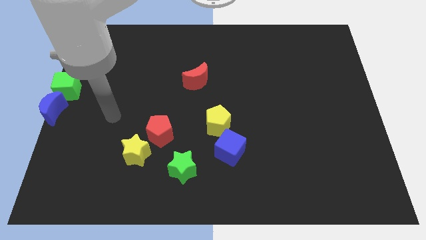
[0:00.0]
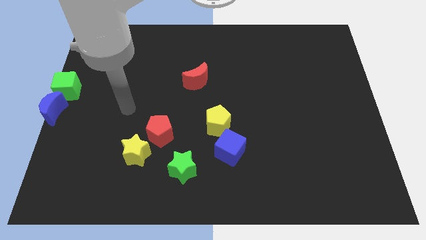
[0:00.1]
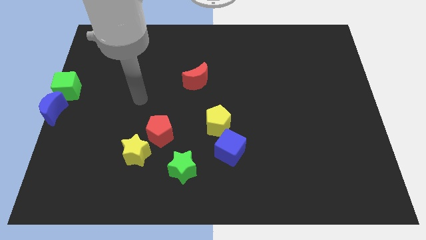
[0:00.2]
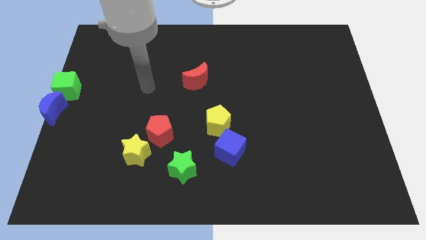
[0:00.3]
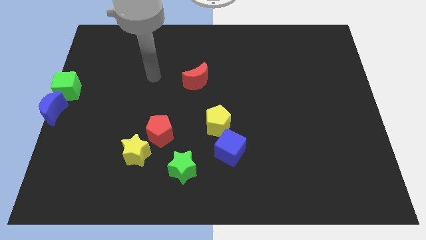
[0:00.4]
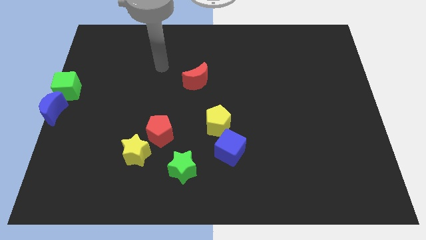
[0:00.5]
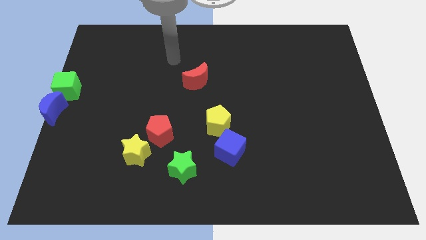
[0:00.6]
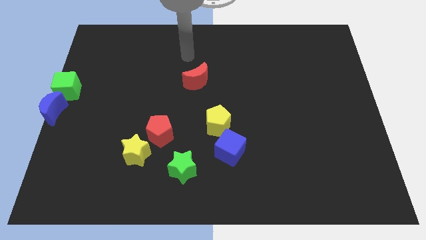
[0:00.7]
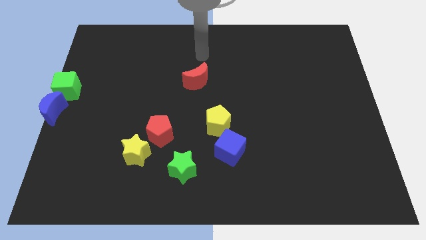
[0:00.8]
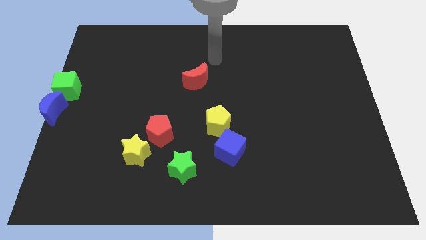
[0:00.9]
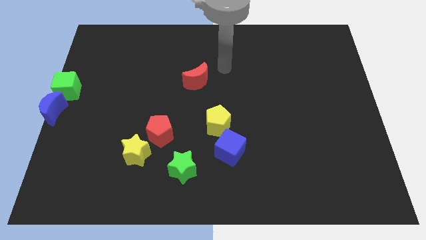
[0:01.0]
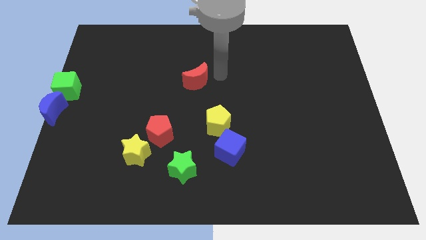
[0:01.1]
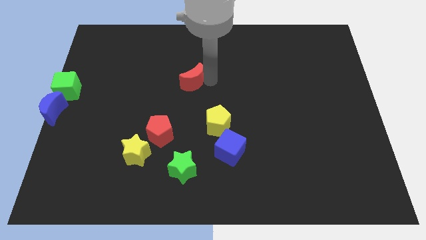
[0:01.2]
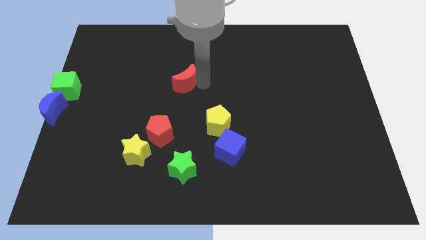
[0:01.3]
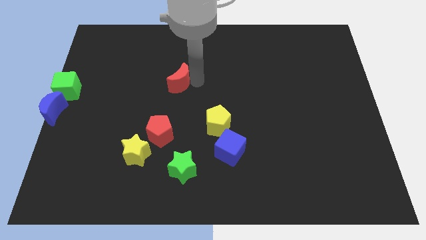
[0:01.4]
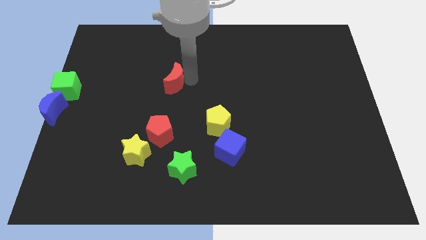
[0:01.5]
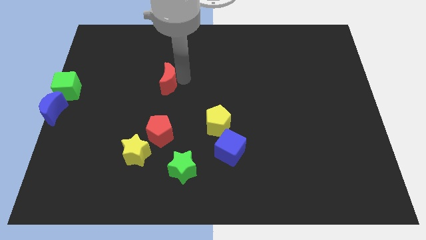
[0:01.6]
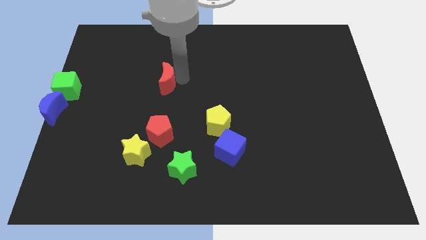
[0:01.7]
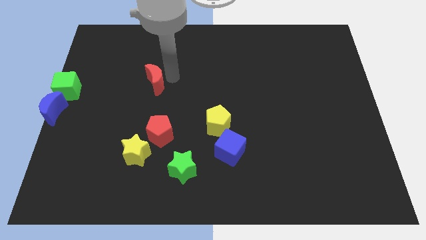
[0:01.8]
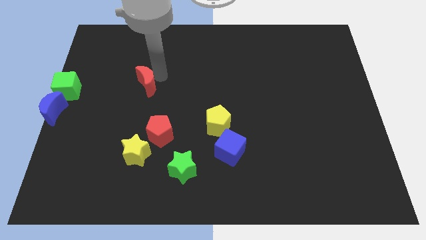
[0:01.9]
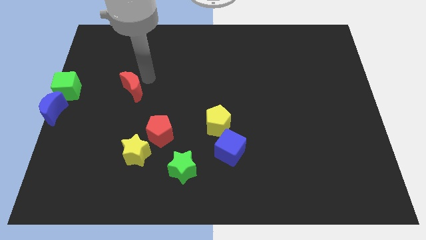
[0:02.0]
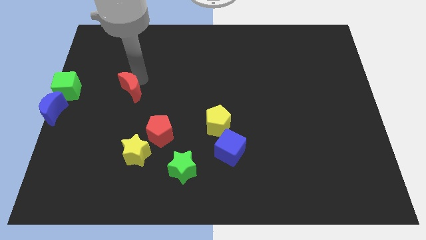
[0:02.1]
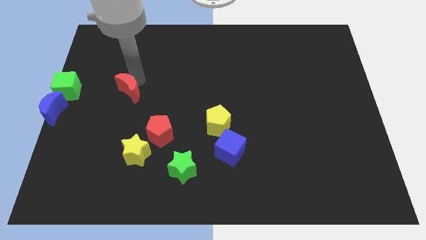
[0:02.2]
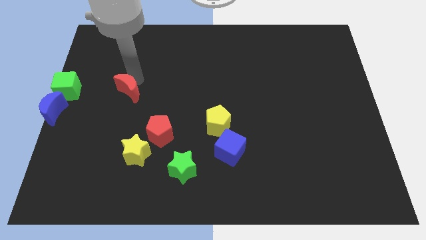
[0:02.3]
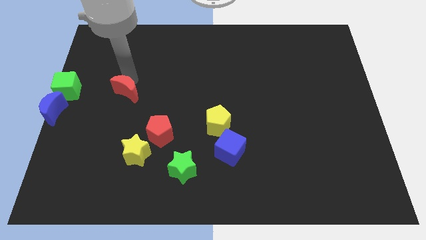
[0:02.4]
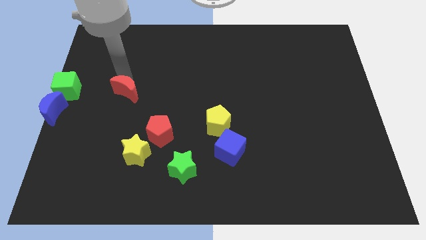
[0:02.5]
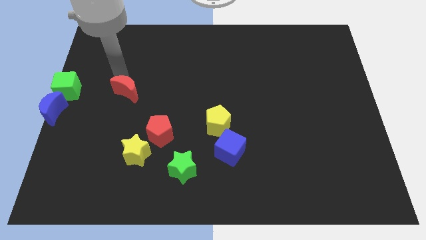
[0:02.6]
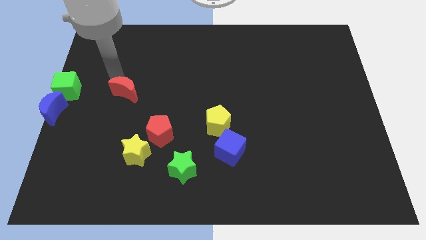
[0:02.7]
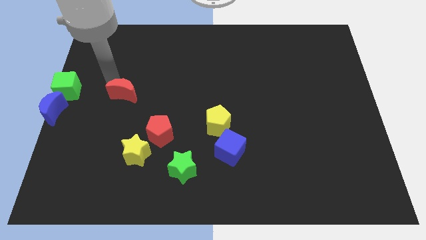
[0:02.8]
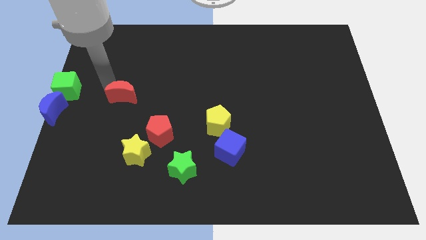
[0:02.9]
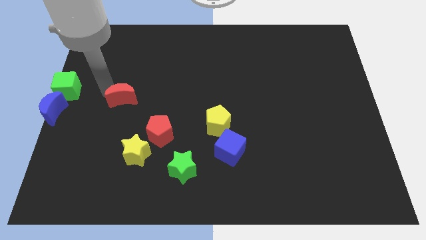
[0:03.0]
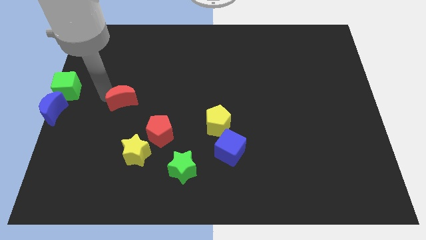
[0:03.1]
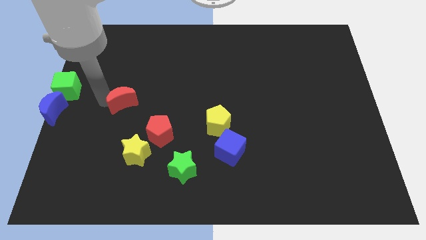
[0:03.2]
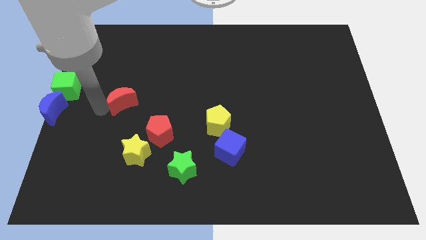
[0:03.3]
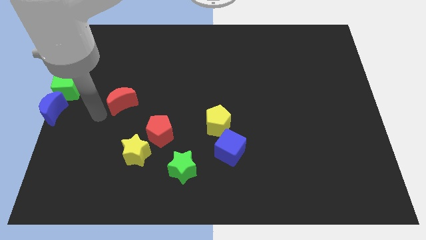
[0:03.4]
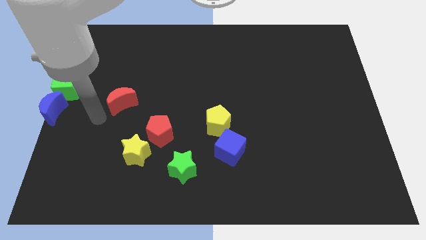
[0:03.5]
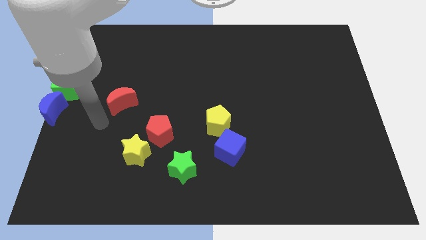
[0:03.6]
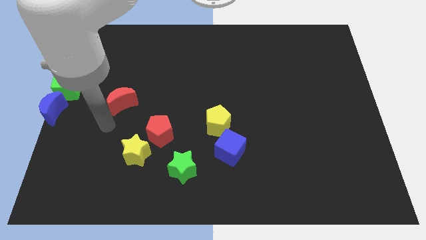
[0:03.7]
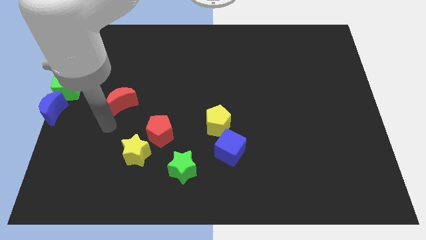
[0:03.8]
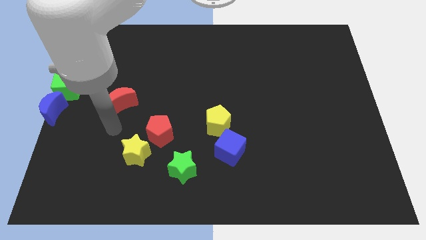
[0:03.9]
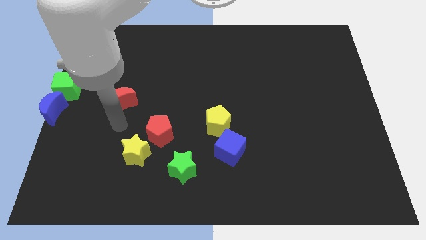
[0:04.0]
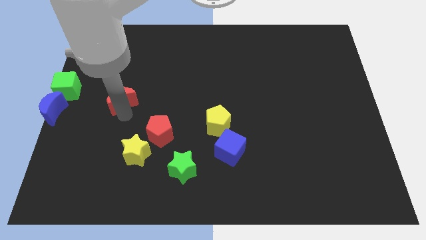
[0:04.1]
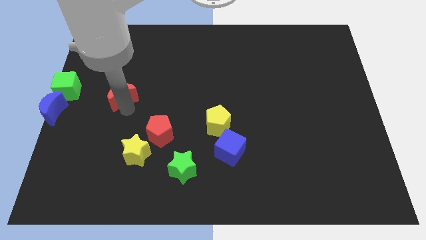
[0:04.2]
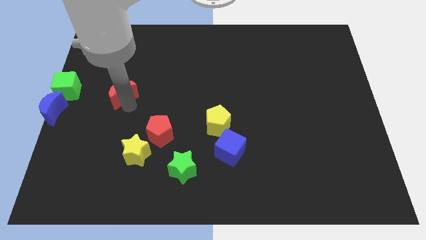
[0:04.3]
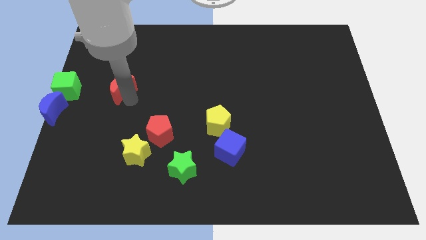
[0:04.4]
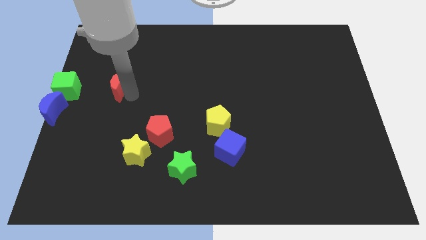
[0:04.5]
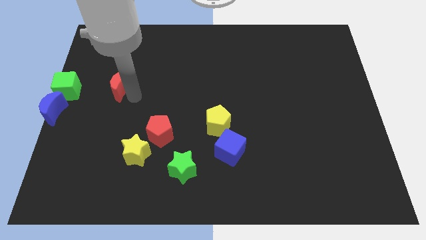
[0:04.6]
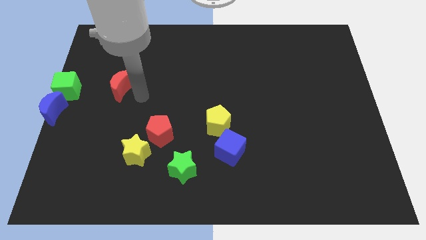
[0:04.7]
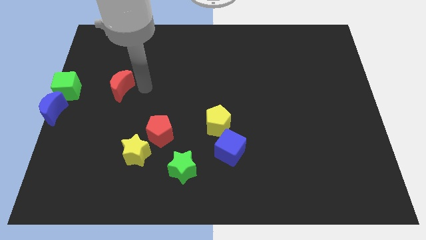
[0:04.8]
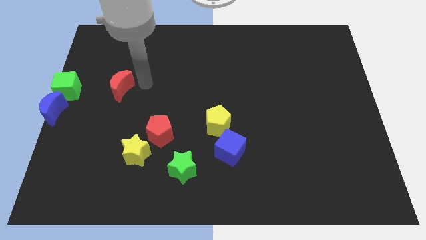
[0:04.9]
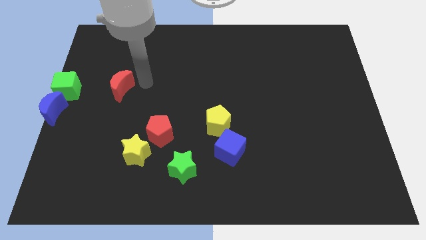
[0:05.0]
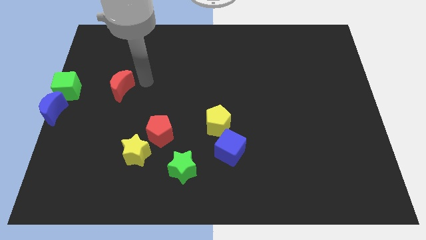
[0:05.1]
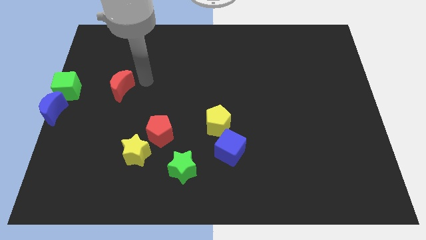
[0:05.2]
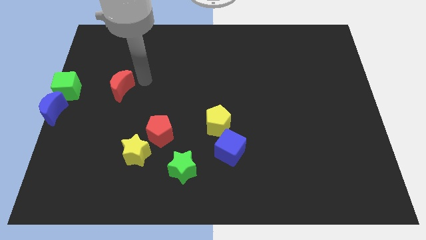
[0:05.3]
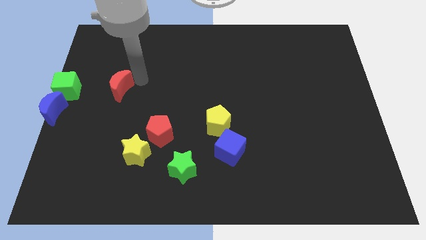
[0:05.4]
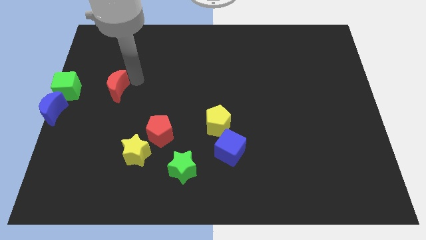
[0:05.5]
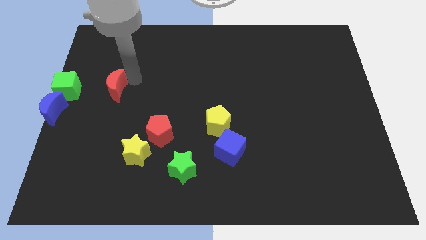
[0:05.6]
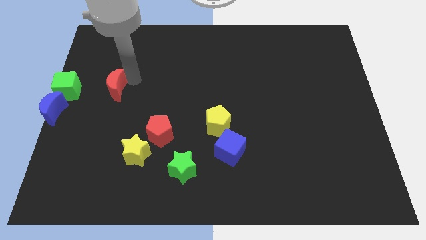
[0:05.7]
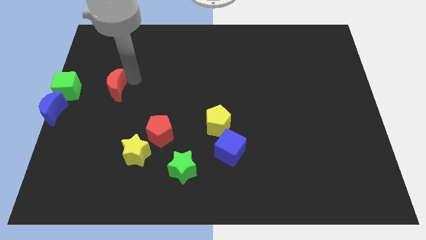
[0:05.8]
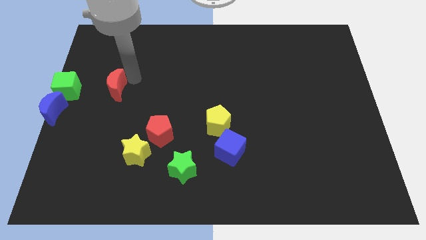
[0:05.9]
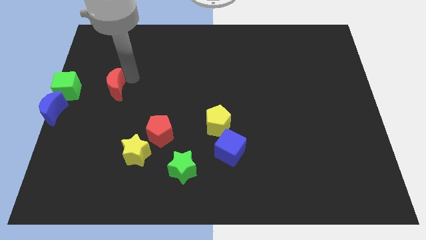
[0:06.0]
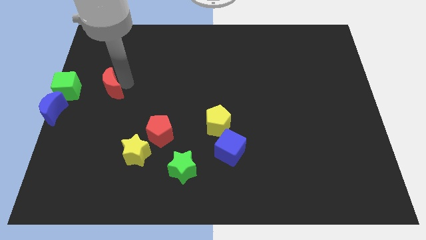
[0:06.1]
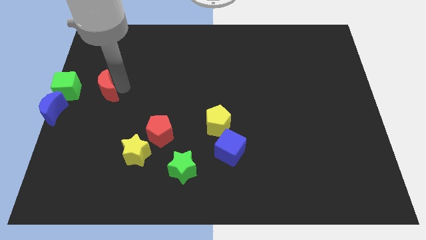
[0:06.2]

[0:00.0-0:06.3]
push the red crescent to the right of the green cube

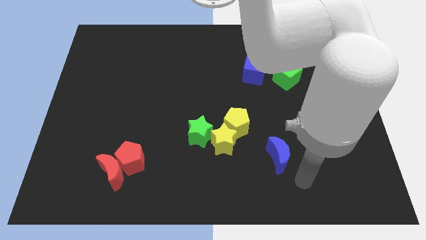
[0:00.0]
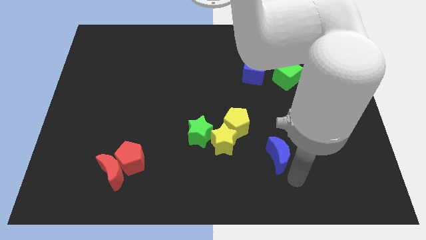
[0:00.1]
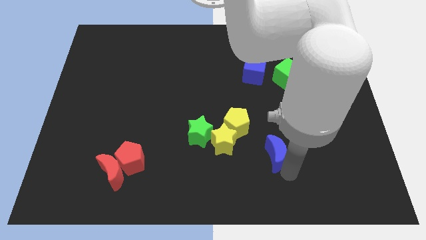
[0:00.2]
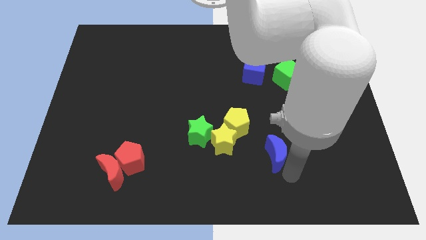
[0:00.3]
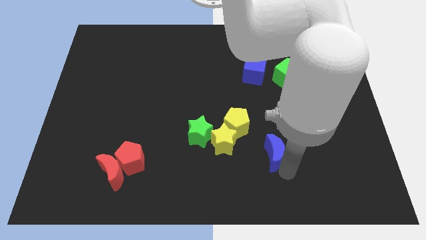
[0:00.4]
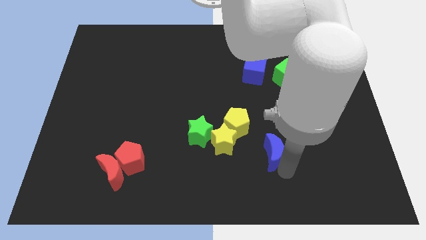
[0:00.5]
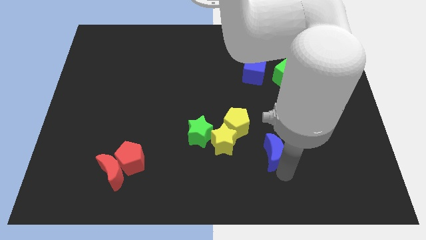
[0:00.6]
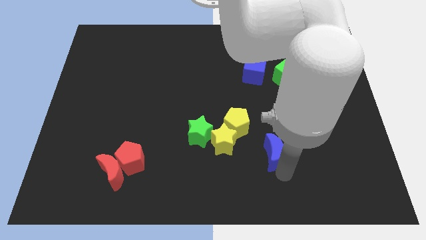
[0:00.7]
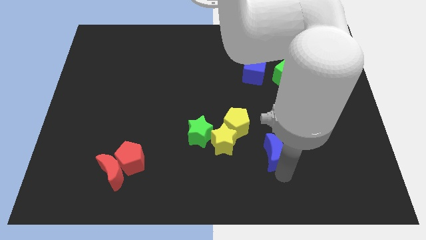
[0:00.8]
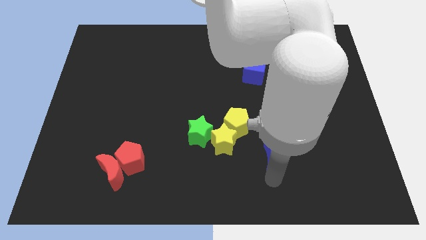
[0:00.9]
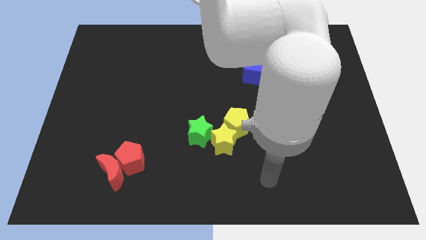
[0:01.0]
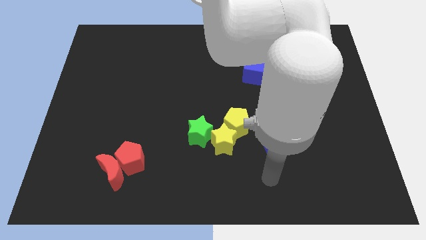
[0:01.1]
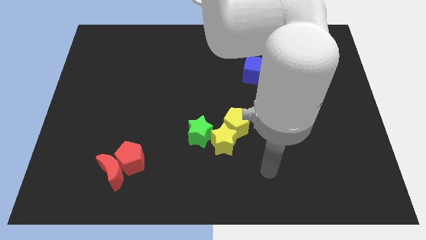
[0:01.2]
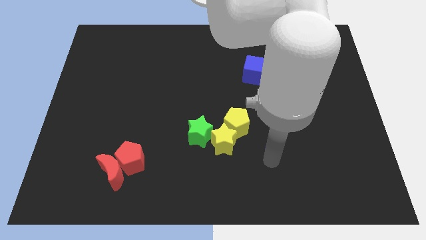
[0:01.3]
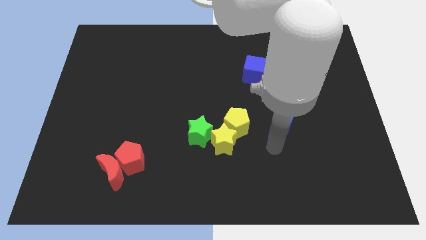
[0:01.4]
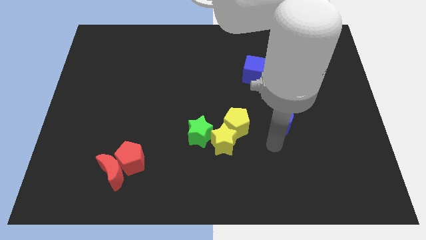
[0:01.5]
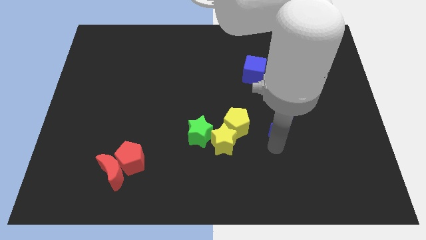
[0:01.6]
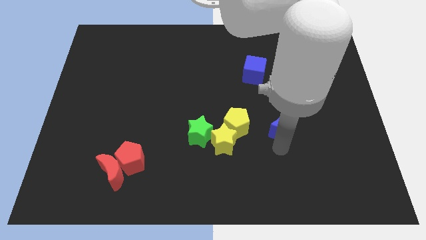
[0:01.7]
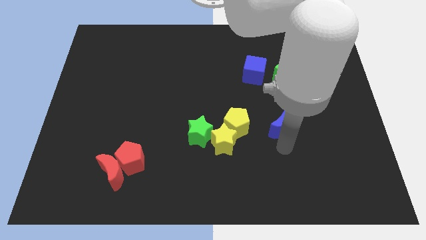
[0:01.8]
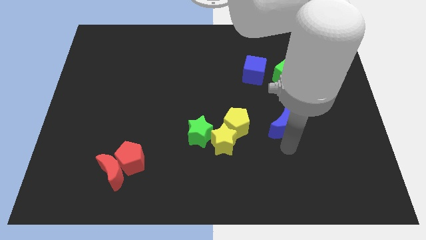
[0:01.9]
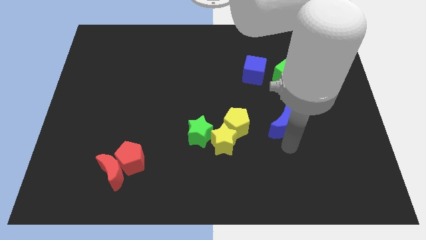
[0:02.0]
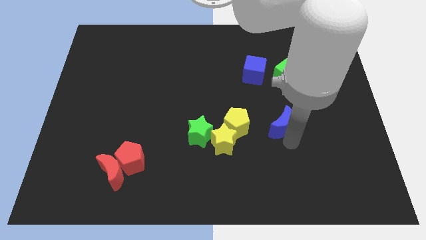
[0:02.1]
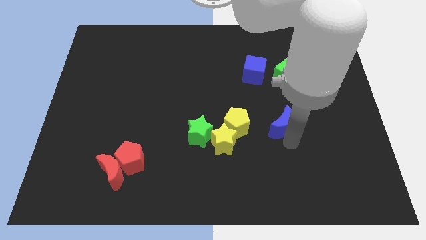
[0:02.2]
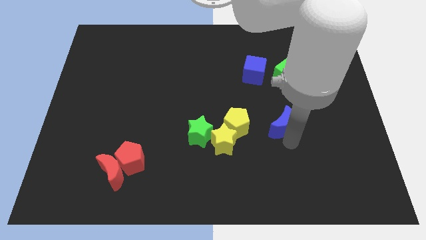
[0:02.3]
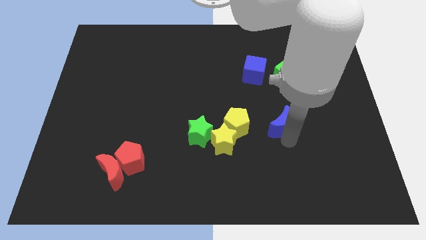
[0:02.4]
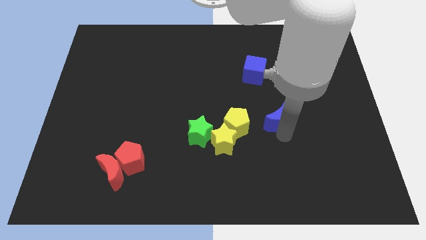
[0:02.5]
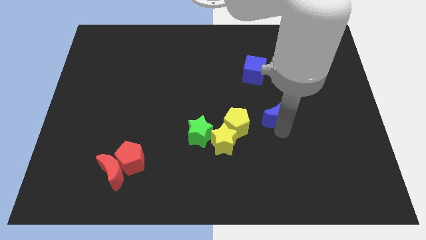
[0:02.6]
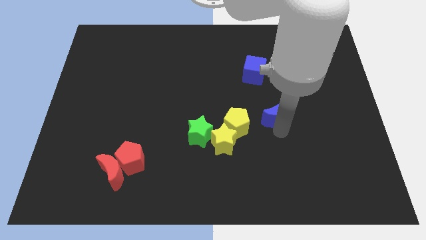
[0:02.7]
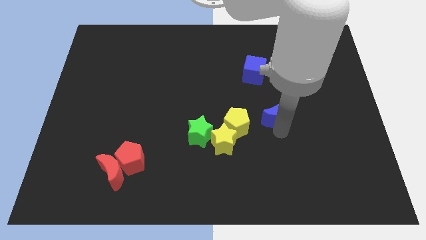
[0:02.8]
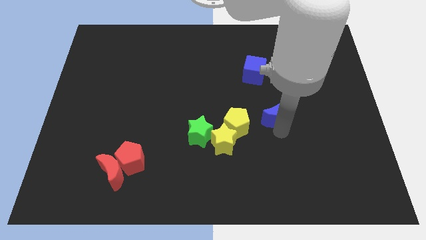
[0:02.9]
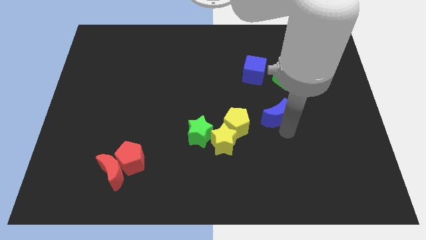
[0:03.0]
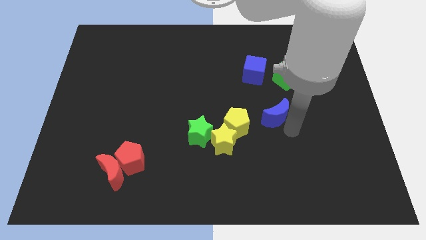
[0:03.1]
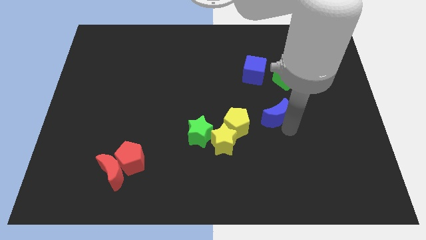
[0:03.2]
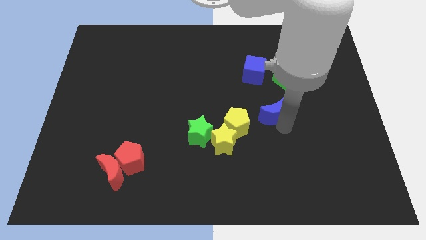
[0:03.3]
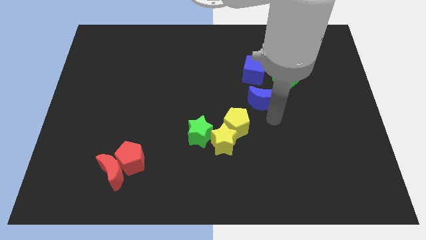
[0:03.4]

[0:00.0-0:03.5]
move the blue moon at the top right side of the yellow pentagon
